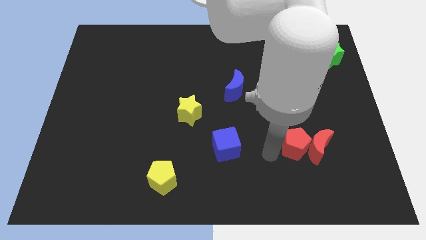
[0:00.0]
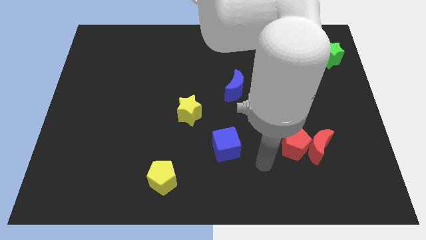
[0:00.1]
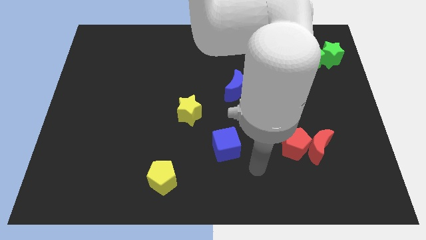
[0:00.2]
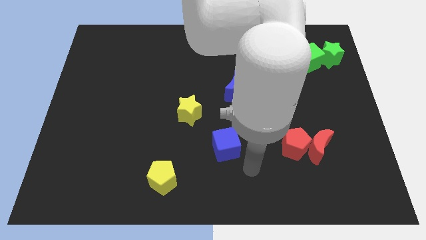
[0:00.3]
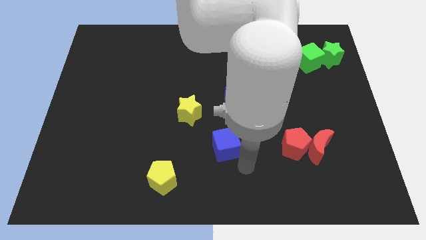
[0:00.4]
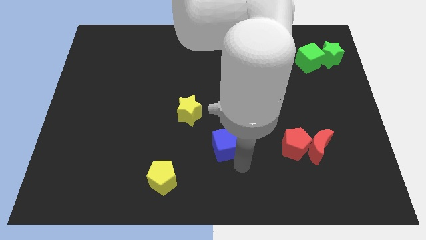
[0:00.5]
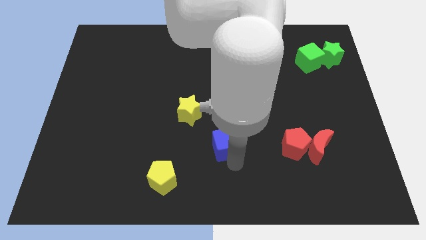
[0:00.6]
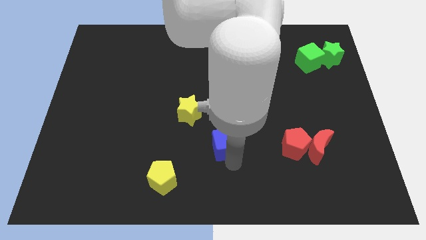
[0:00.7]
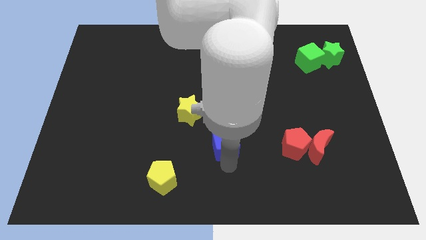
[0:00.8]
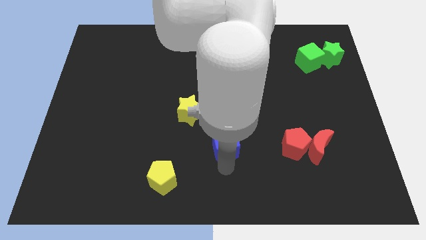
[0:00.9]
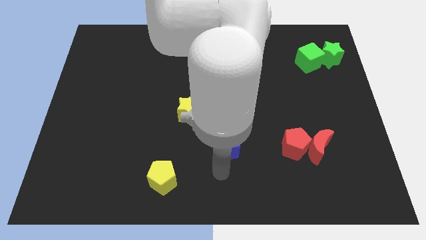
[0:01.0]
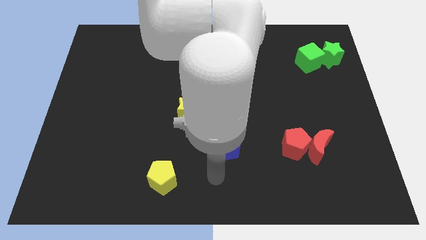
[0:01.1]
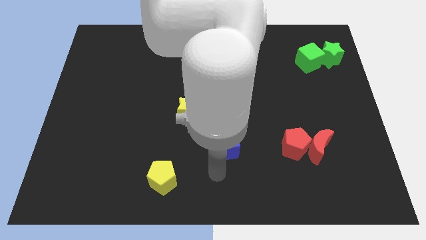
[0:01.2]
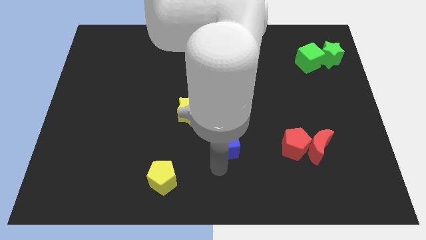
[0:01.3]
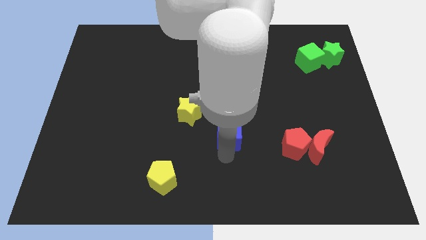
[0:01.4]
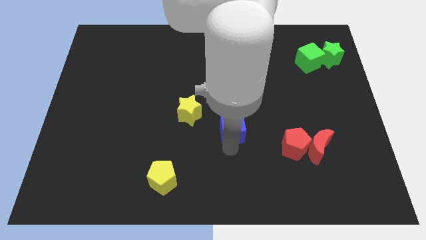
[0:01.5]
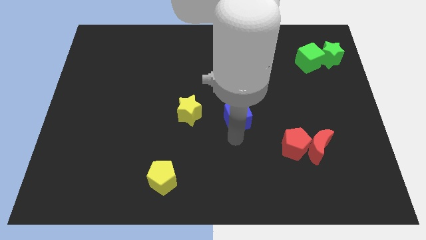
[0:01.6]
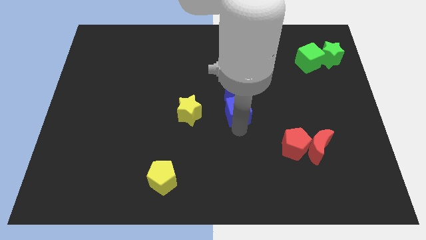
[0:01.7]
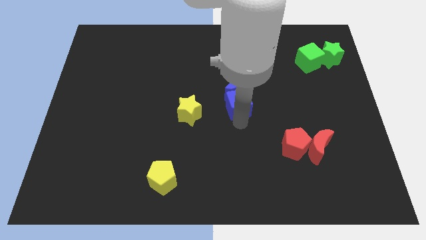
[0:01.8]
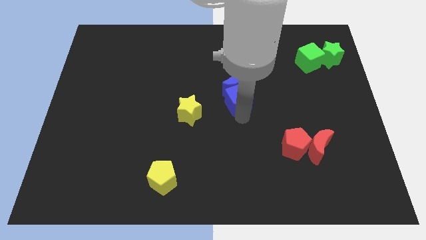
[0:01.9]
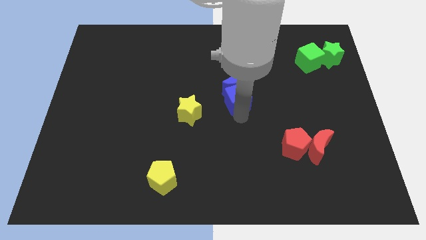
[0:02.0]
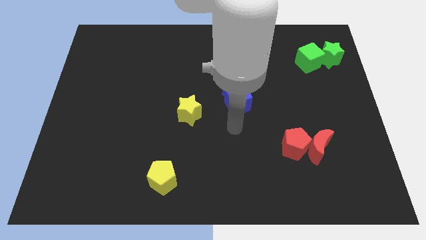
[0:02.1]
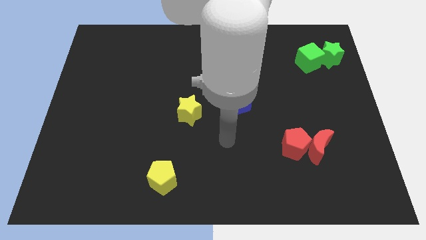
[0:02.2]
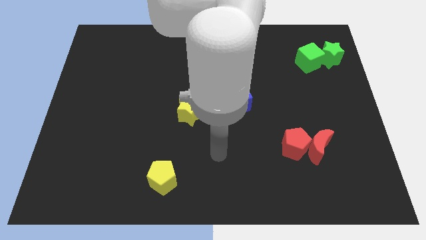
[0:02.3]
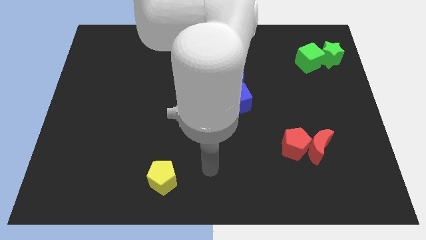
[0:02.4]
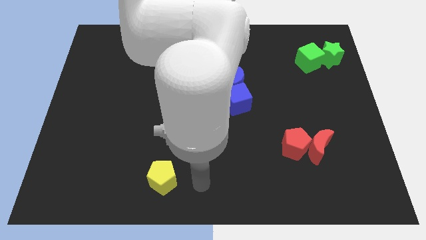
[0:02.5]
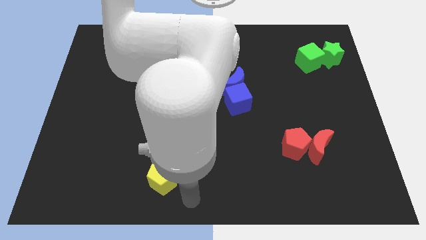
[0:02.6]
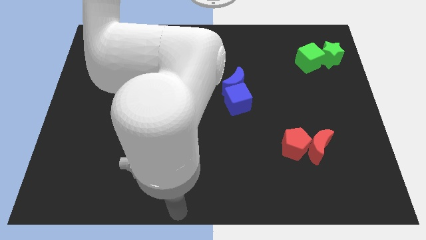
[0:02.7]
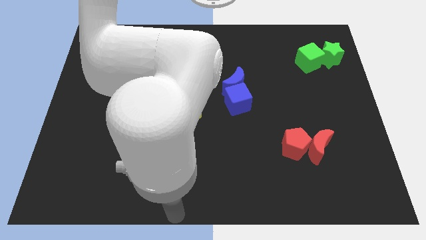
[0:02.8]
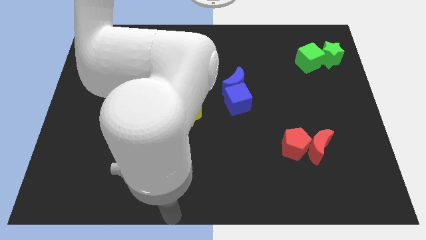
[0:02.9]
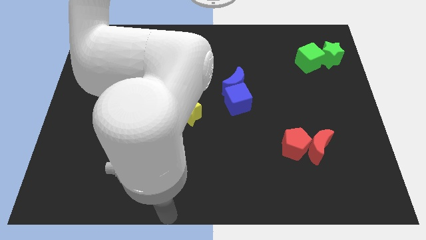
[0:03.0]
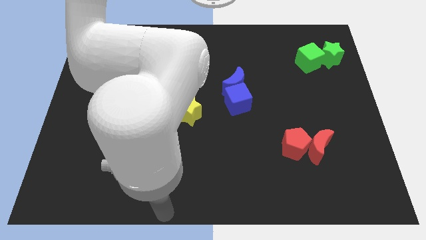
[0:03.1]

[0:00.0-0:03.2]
move the blue cube into the blue crescent

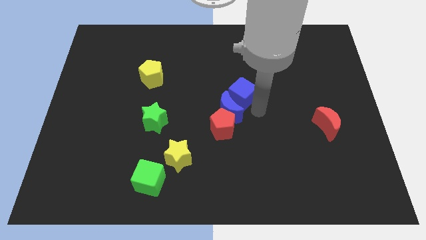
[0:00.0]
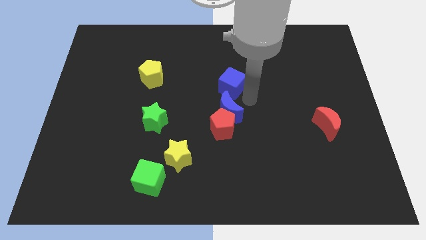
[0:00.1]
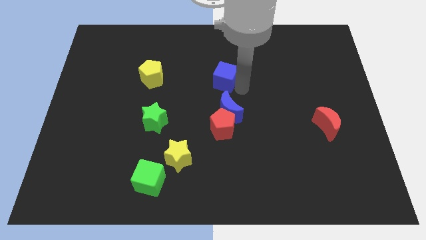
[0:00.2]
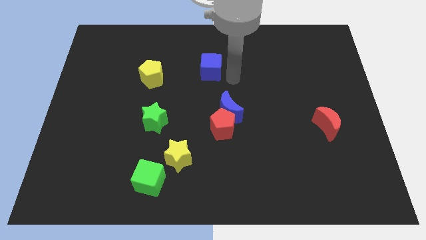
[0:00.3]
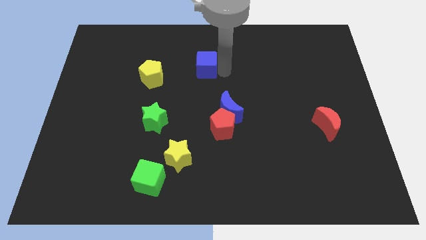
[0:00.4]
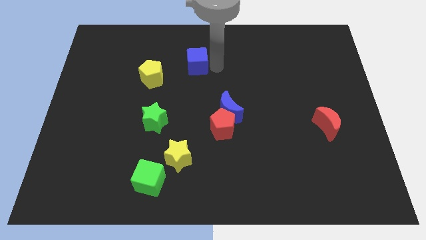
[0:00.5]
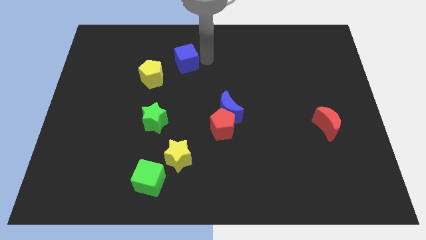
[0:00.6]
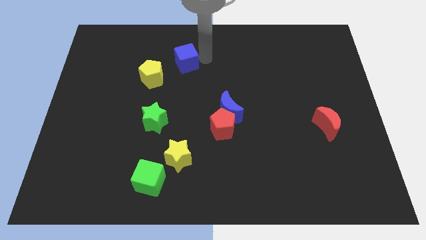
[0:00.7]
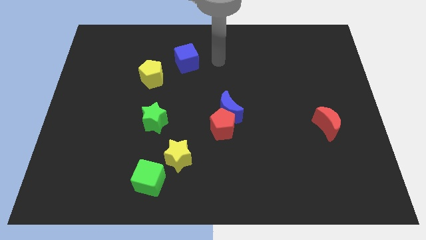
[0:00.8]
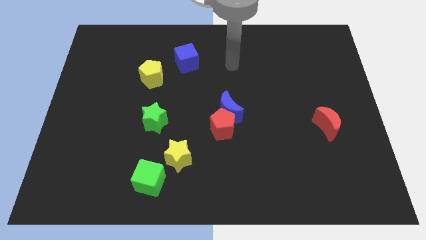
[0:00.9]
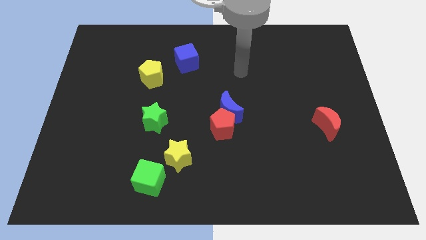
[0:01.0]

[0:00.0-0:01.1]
separate blue cube from blue crescent

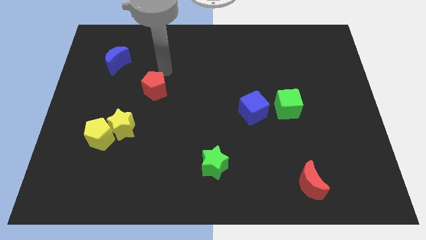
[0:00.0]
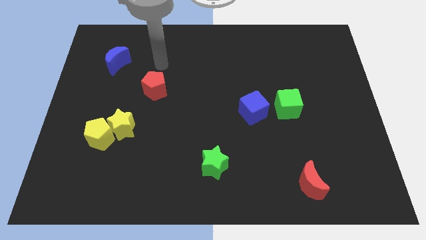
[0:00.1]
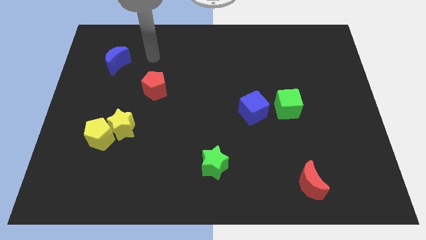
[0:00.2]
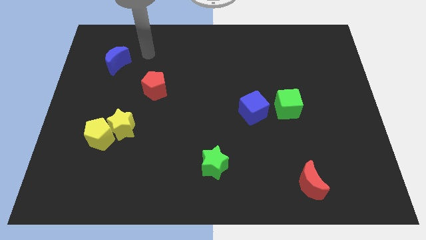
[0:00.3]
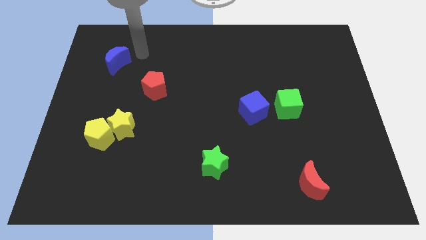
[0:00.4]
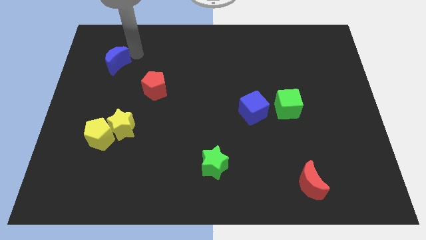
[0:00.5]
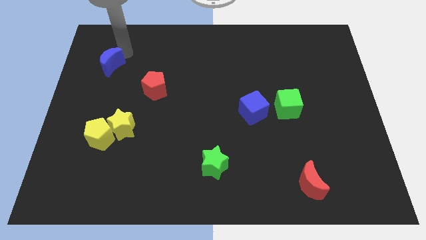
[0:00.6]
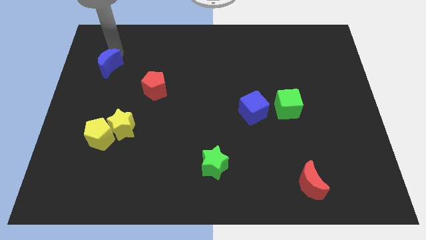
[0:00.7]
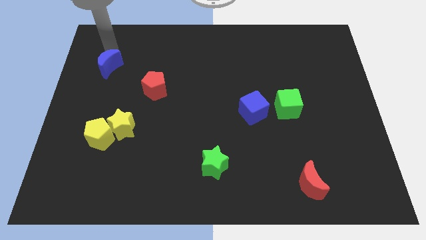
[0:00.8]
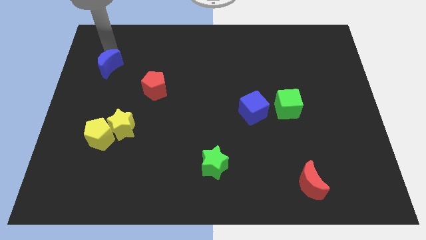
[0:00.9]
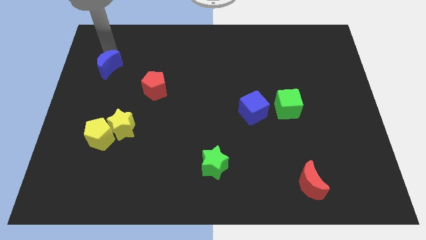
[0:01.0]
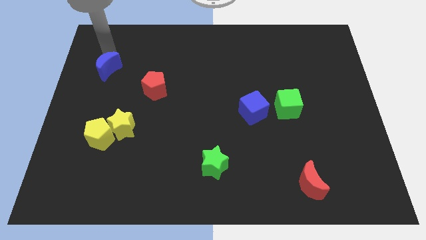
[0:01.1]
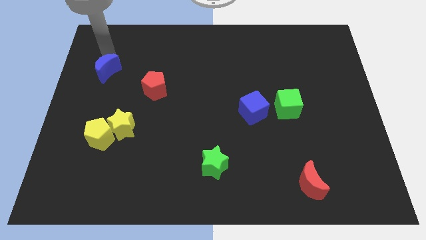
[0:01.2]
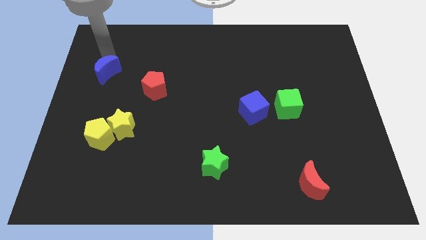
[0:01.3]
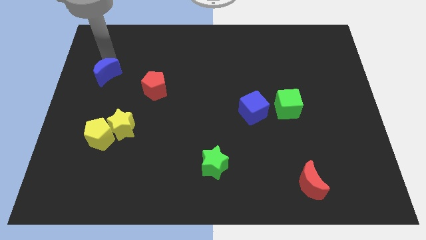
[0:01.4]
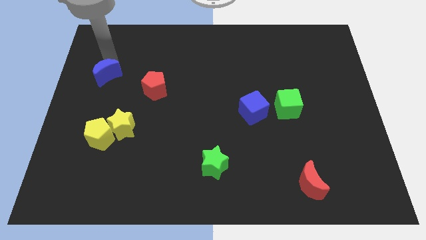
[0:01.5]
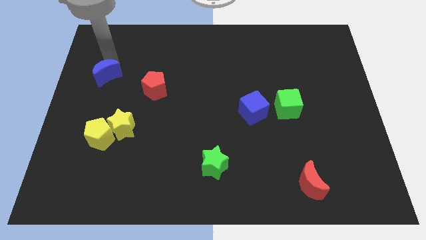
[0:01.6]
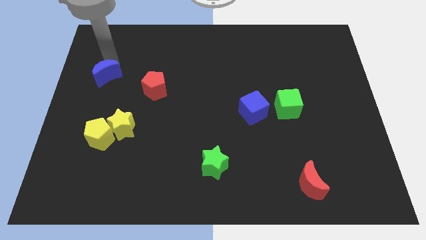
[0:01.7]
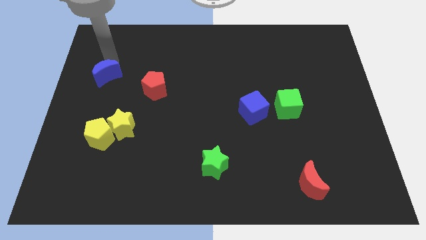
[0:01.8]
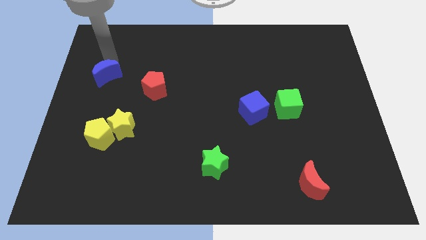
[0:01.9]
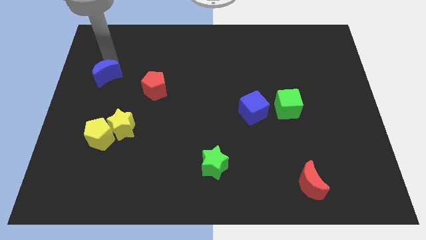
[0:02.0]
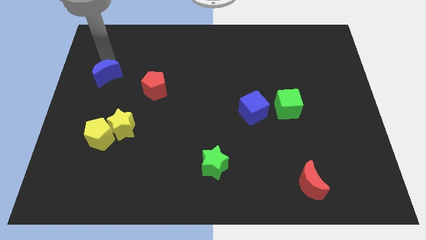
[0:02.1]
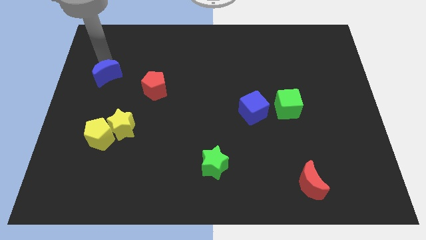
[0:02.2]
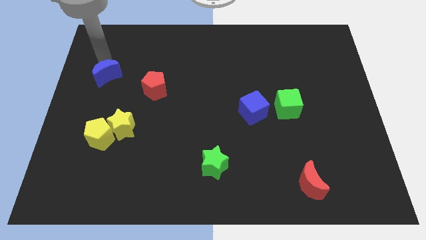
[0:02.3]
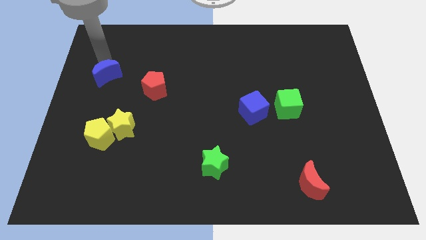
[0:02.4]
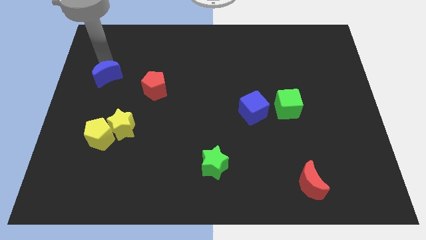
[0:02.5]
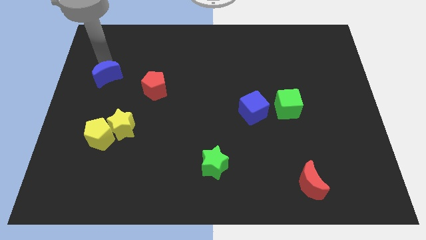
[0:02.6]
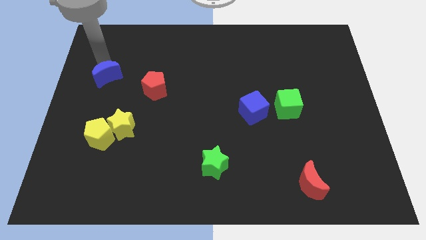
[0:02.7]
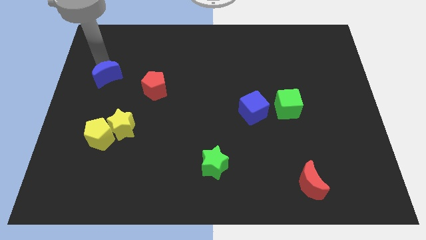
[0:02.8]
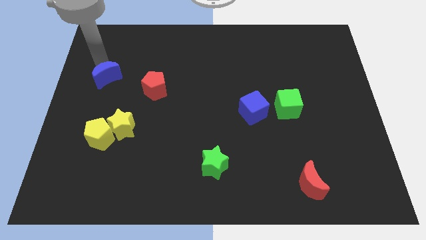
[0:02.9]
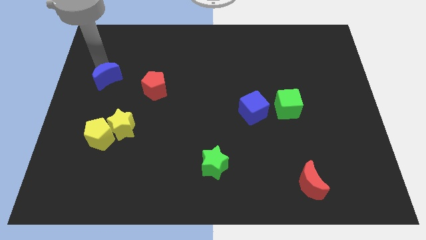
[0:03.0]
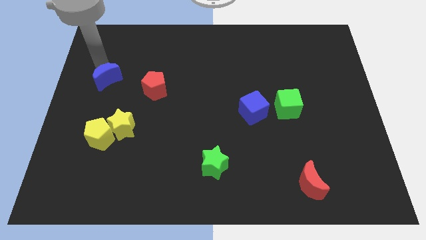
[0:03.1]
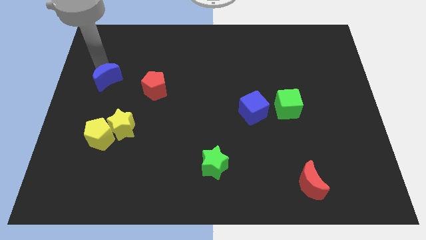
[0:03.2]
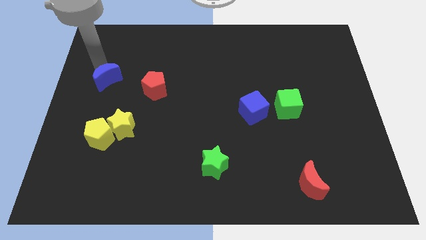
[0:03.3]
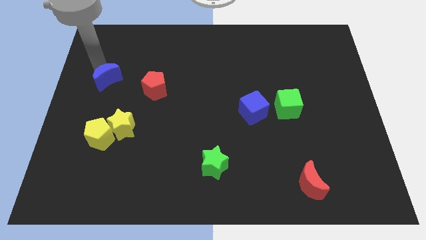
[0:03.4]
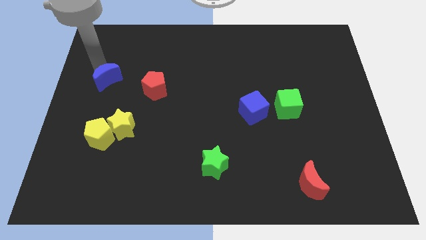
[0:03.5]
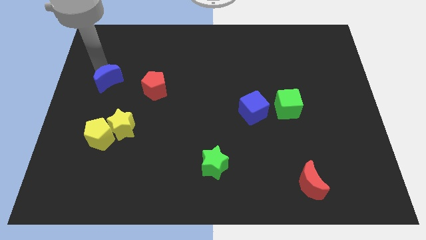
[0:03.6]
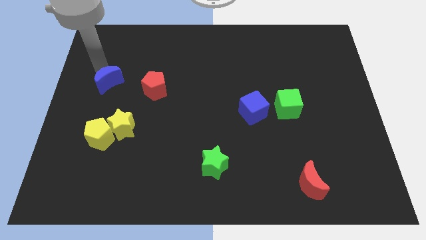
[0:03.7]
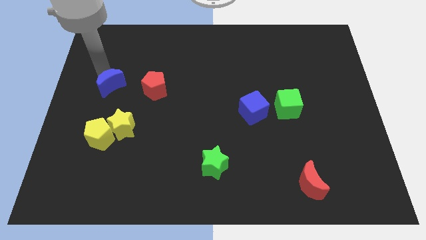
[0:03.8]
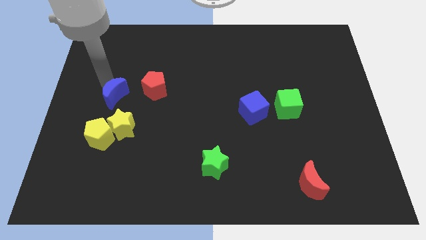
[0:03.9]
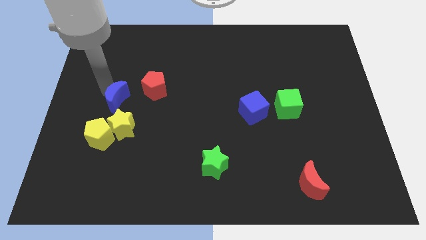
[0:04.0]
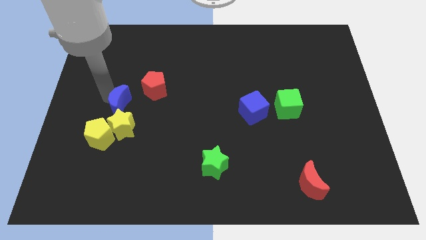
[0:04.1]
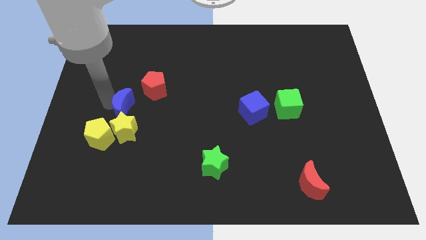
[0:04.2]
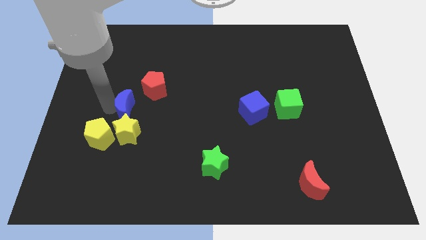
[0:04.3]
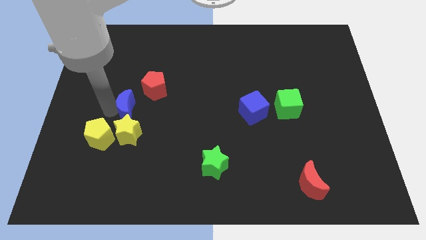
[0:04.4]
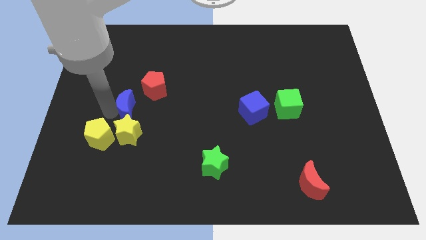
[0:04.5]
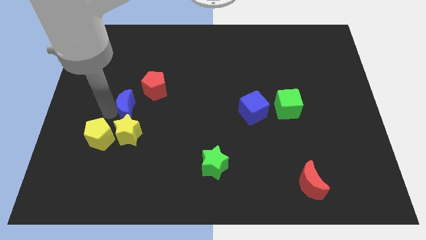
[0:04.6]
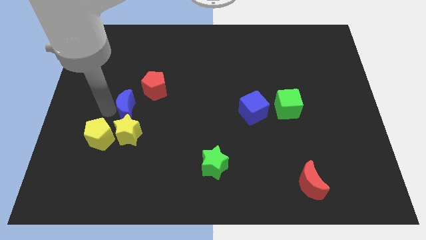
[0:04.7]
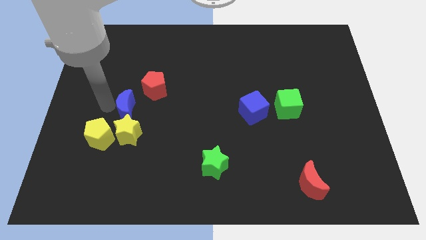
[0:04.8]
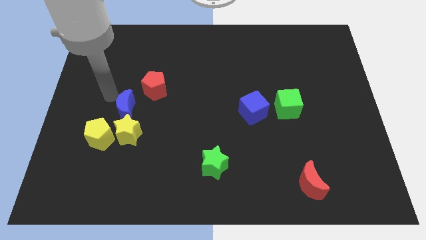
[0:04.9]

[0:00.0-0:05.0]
place the blue crescent above the yellow star
